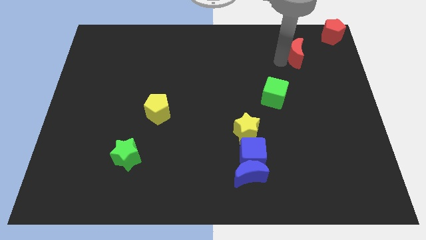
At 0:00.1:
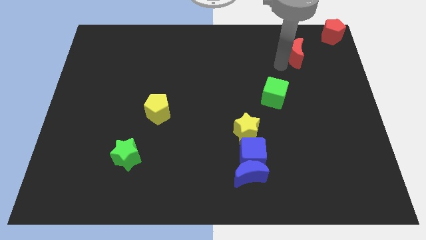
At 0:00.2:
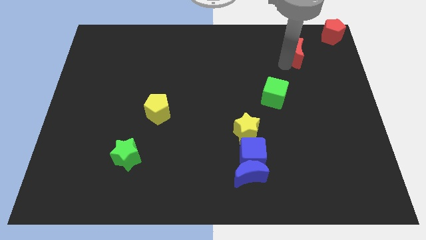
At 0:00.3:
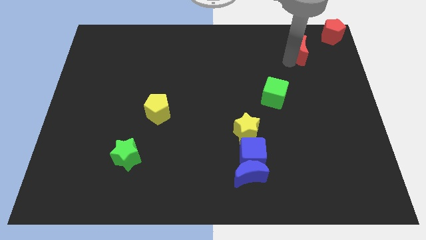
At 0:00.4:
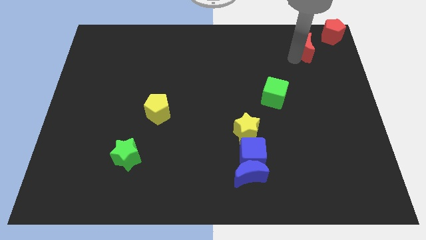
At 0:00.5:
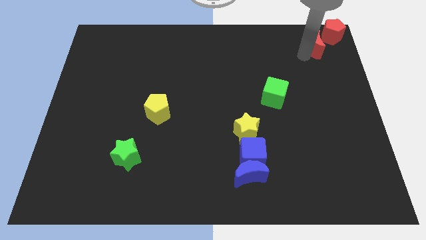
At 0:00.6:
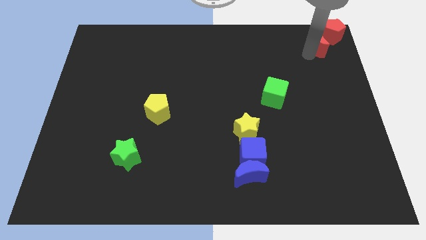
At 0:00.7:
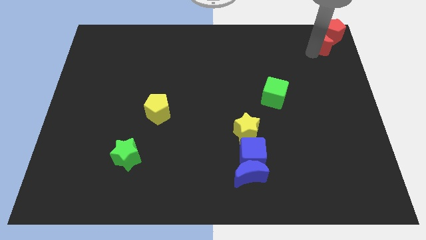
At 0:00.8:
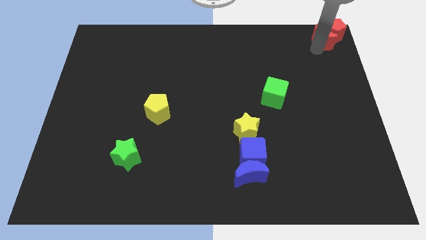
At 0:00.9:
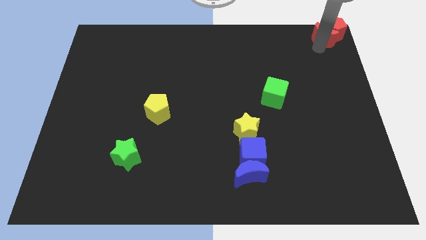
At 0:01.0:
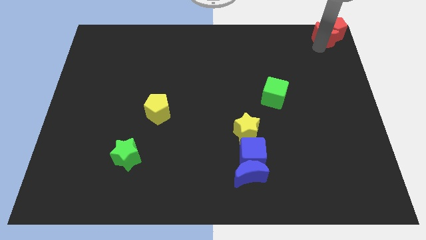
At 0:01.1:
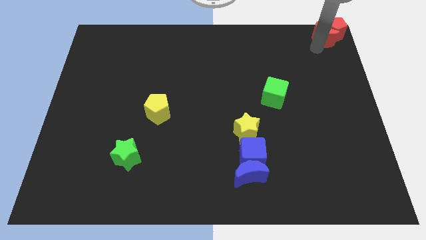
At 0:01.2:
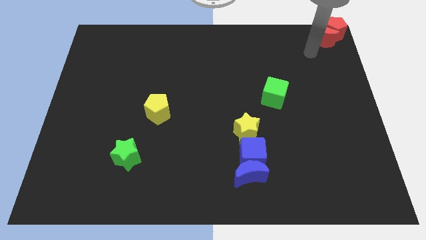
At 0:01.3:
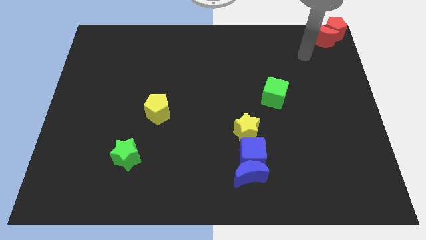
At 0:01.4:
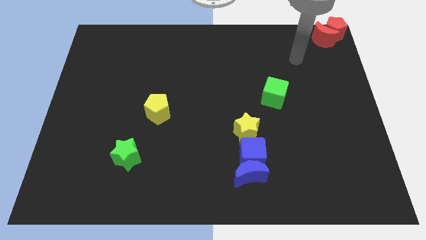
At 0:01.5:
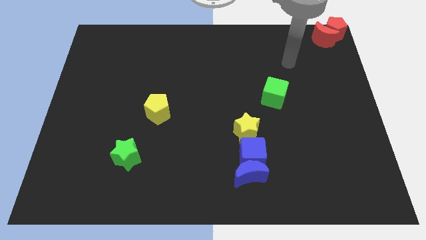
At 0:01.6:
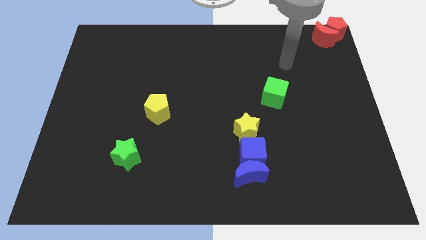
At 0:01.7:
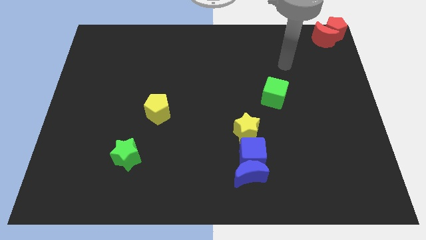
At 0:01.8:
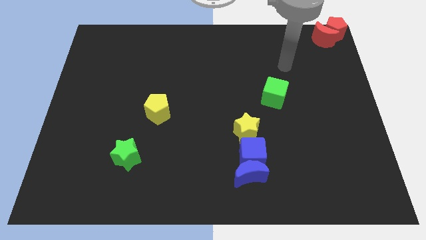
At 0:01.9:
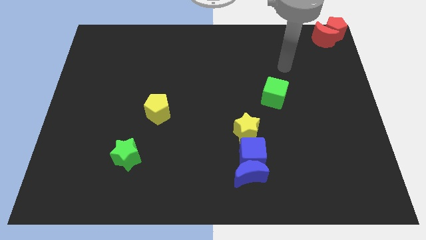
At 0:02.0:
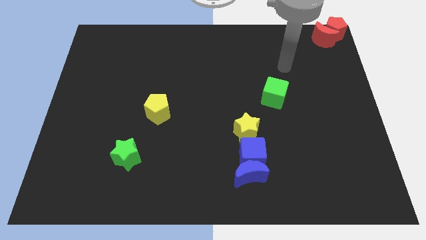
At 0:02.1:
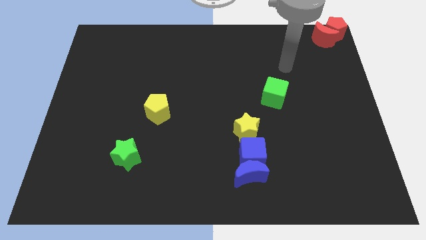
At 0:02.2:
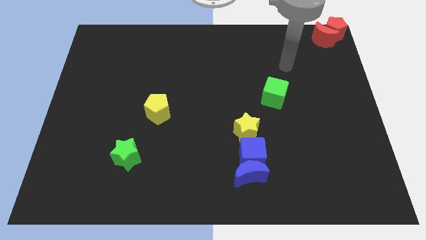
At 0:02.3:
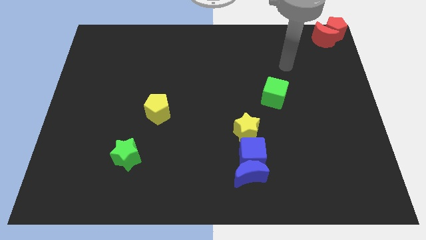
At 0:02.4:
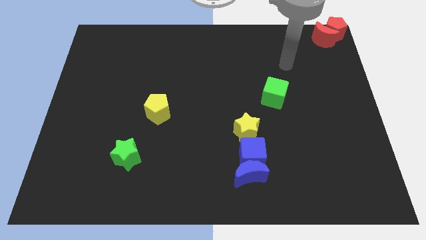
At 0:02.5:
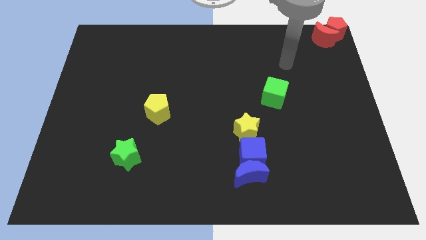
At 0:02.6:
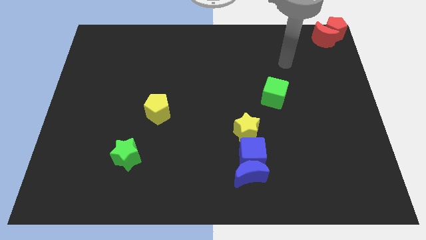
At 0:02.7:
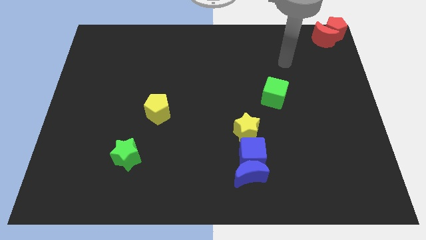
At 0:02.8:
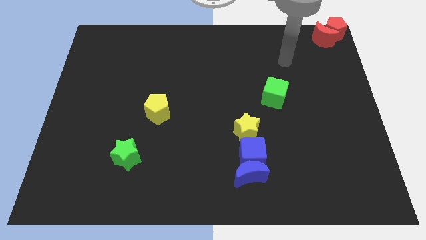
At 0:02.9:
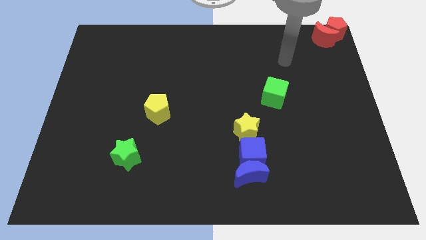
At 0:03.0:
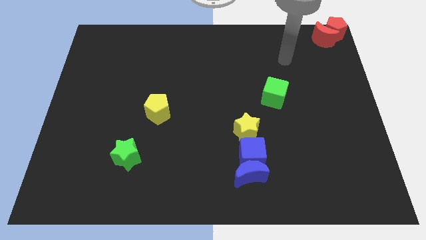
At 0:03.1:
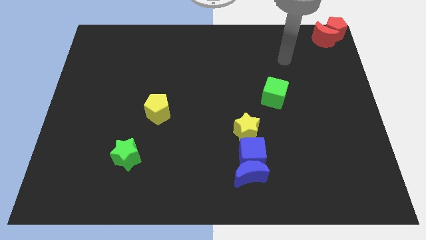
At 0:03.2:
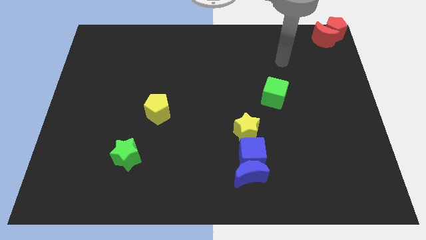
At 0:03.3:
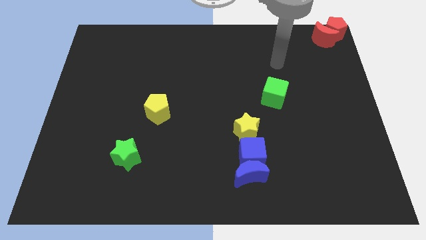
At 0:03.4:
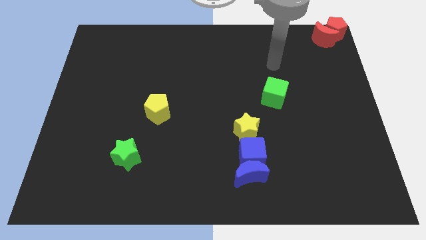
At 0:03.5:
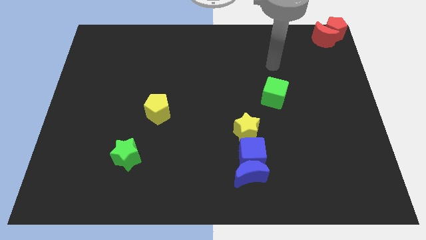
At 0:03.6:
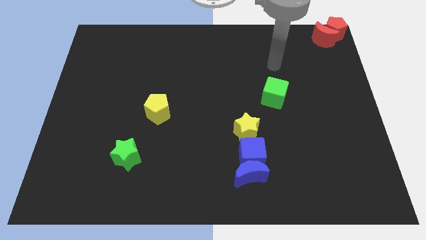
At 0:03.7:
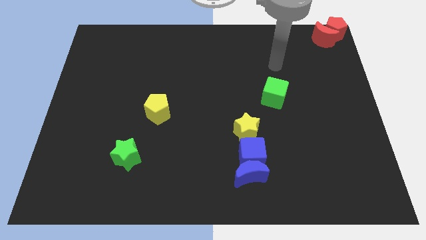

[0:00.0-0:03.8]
attach the red moon to the red pentagon

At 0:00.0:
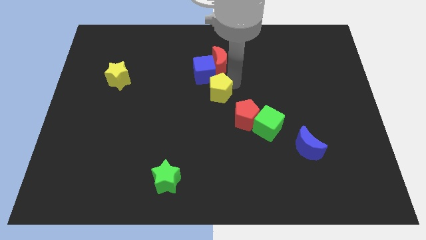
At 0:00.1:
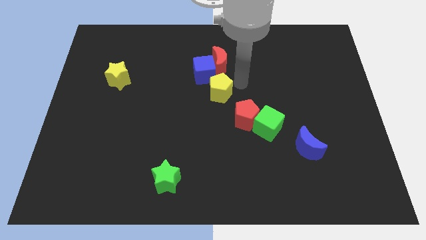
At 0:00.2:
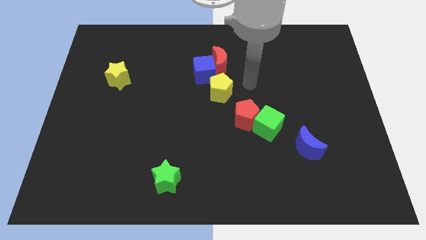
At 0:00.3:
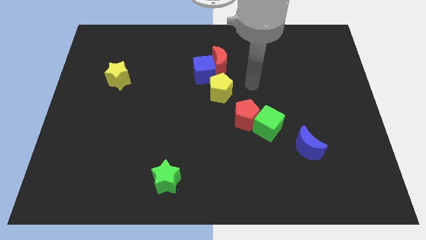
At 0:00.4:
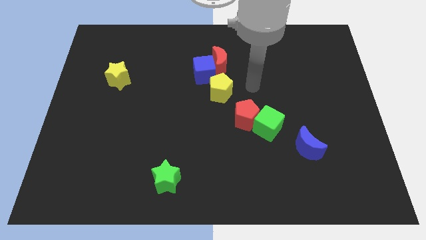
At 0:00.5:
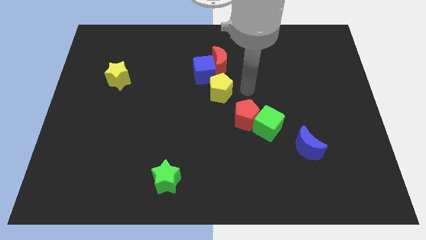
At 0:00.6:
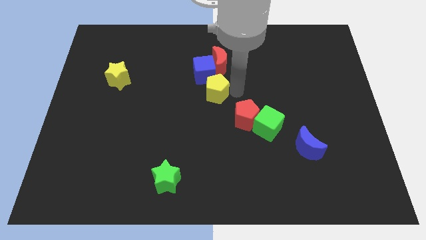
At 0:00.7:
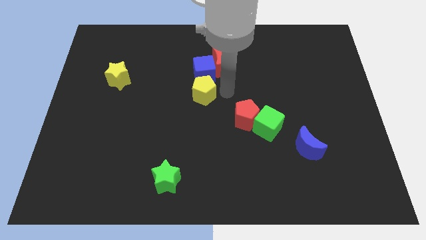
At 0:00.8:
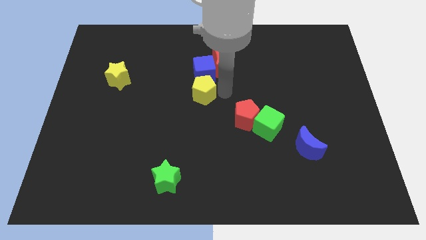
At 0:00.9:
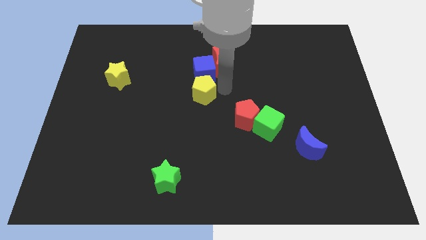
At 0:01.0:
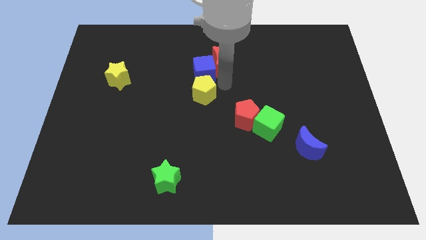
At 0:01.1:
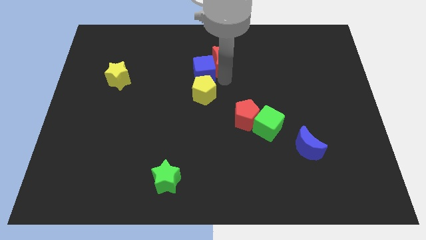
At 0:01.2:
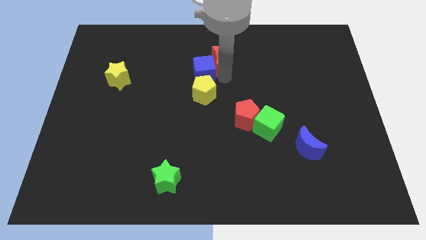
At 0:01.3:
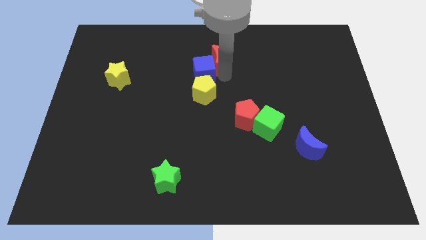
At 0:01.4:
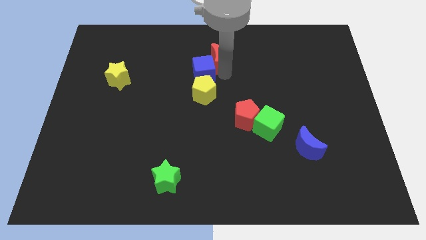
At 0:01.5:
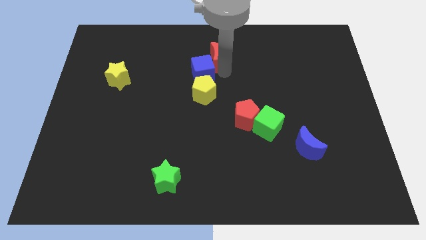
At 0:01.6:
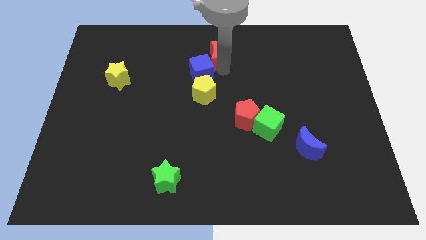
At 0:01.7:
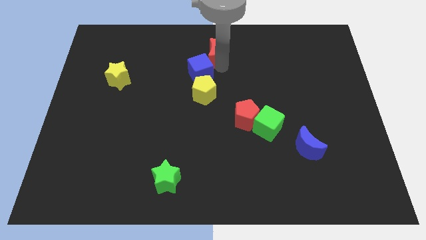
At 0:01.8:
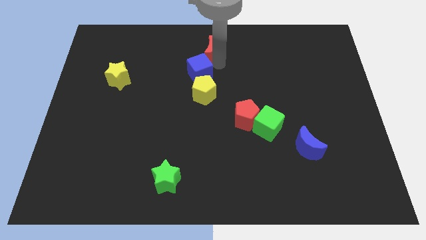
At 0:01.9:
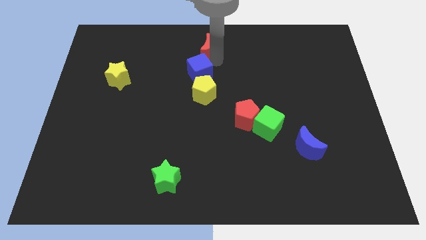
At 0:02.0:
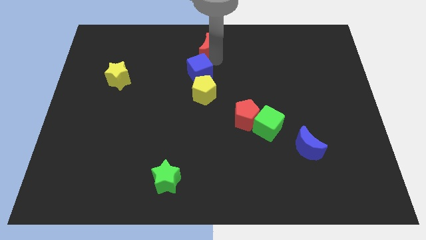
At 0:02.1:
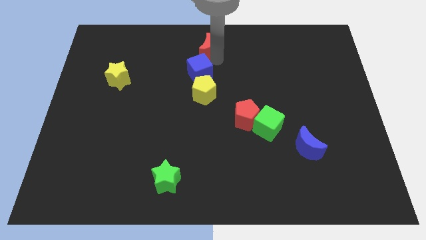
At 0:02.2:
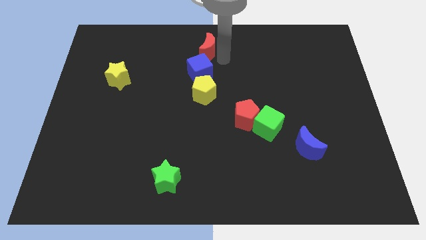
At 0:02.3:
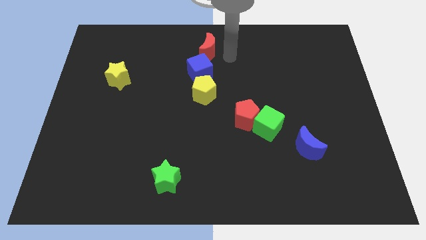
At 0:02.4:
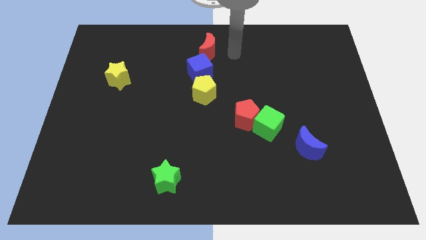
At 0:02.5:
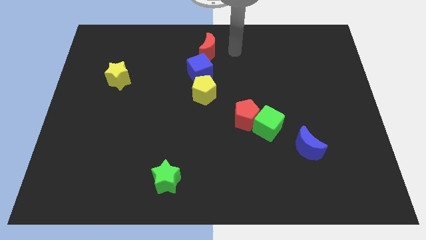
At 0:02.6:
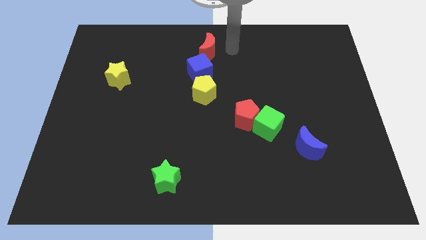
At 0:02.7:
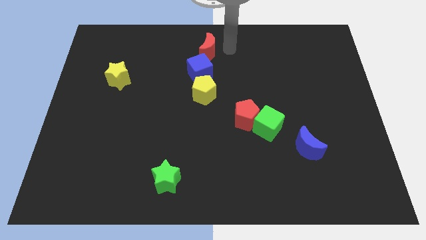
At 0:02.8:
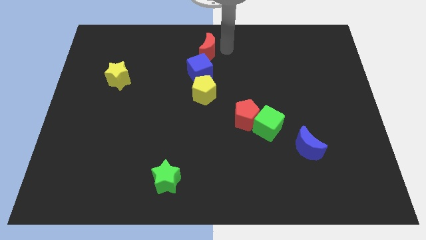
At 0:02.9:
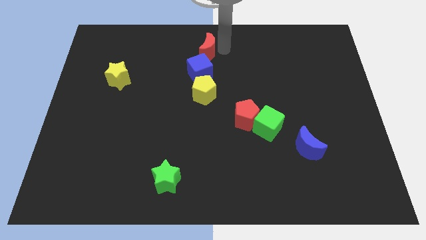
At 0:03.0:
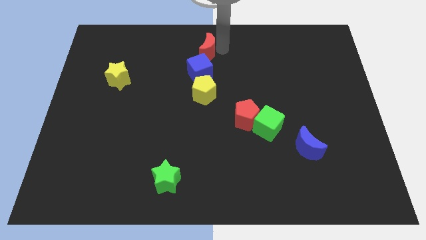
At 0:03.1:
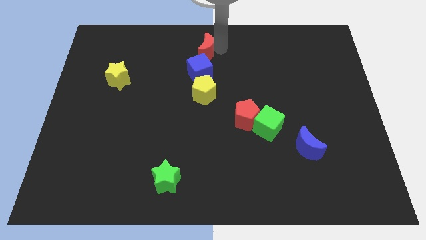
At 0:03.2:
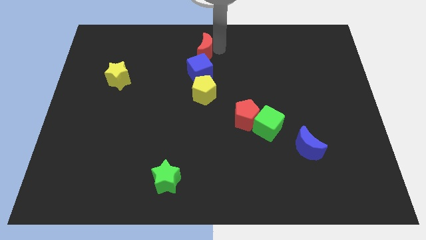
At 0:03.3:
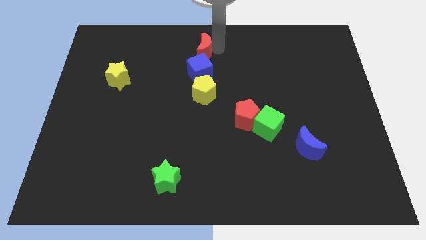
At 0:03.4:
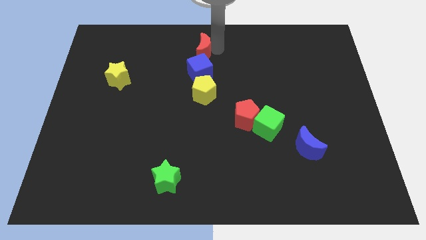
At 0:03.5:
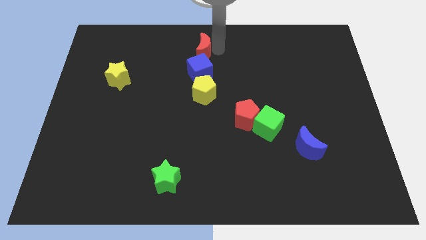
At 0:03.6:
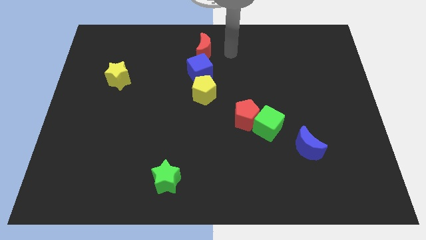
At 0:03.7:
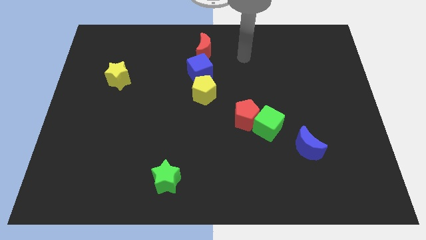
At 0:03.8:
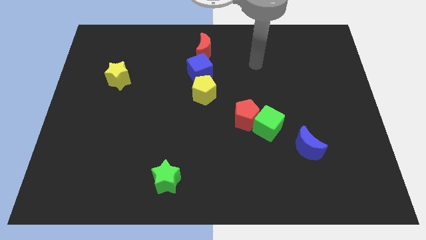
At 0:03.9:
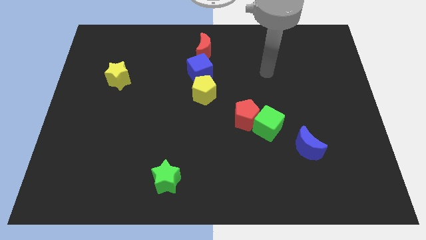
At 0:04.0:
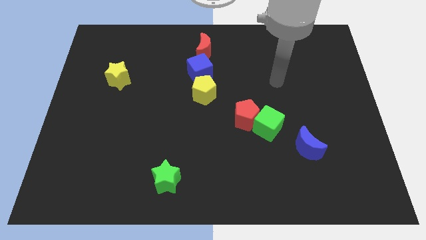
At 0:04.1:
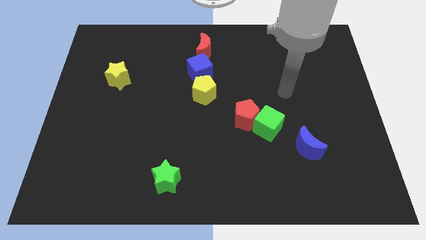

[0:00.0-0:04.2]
place the red moon blue cube and yellow pentagon in a vertical line

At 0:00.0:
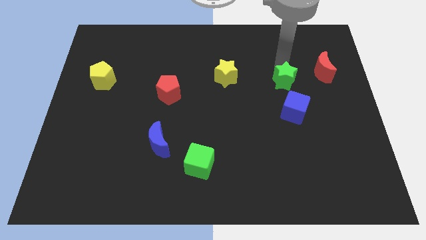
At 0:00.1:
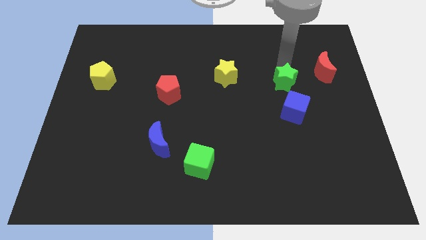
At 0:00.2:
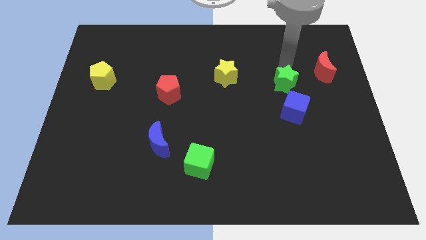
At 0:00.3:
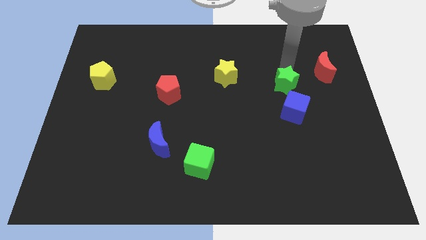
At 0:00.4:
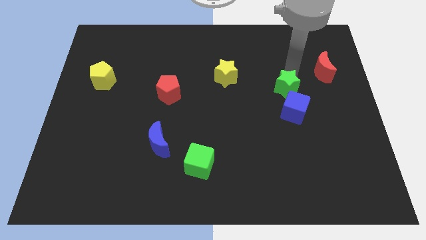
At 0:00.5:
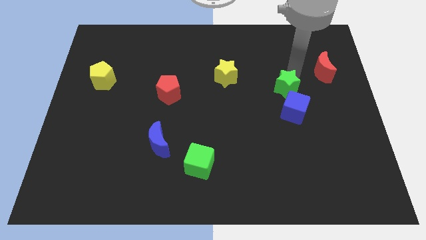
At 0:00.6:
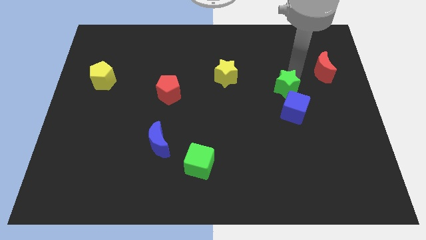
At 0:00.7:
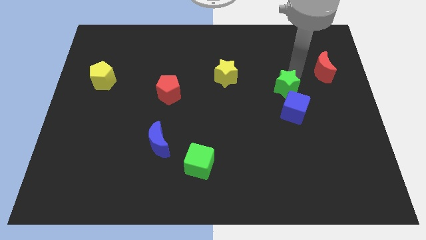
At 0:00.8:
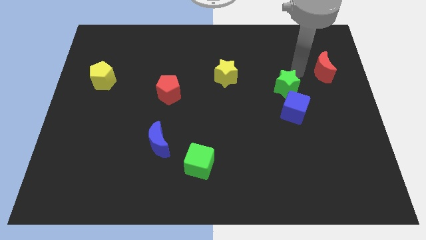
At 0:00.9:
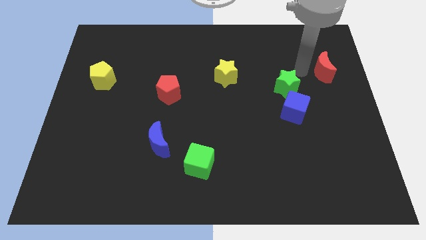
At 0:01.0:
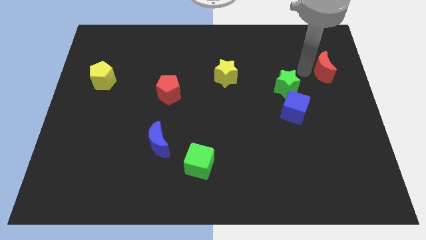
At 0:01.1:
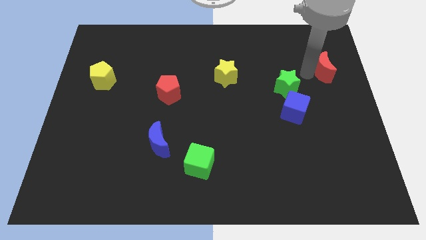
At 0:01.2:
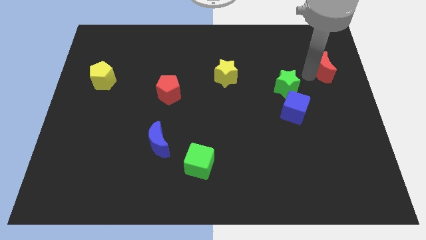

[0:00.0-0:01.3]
push the green star close to the blue cube
